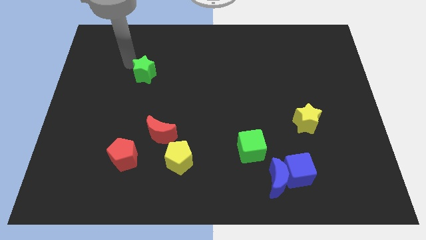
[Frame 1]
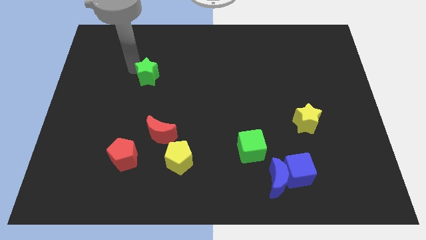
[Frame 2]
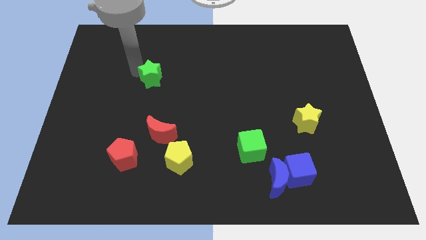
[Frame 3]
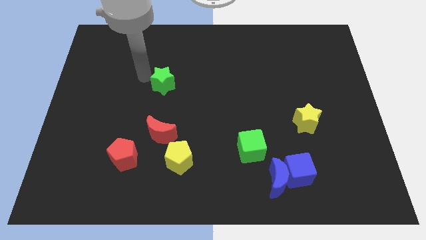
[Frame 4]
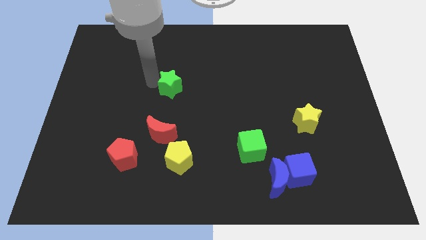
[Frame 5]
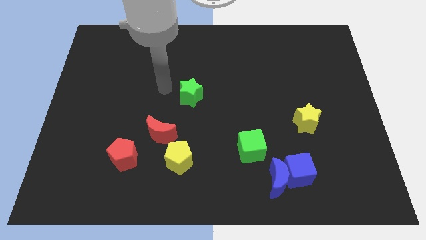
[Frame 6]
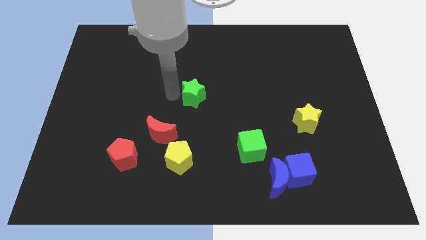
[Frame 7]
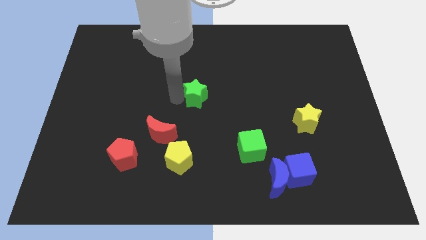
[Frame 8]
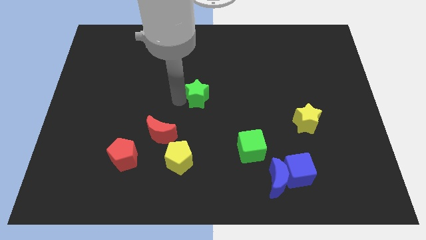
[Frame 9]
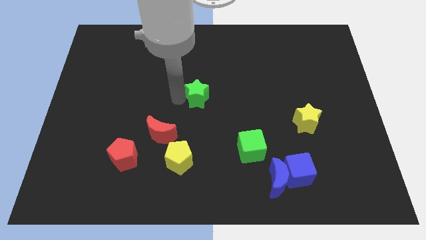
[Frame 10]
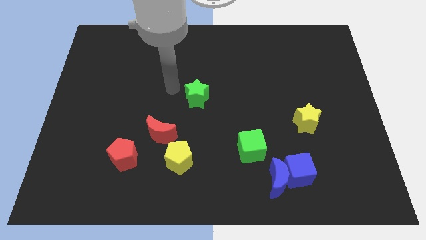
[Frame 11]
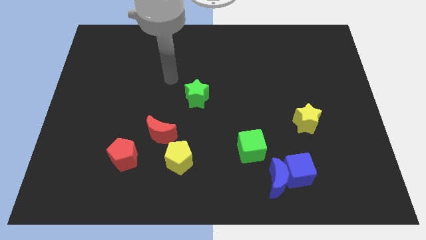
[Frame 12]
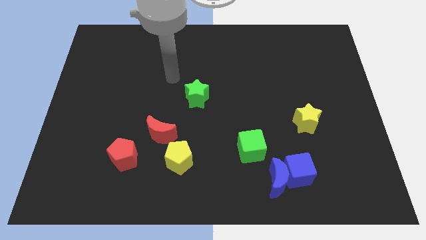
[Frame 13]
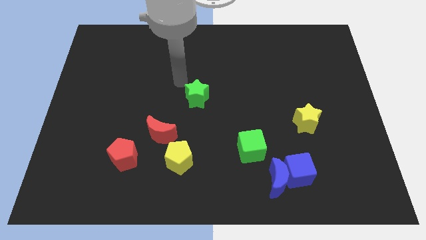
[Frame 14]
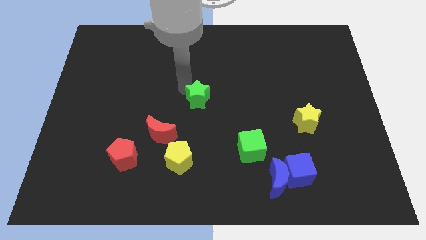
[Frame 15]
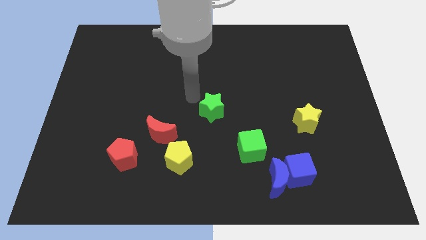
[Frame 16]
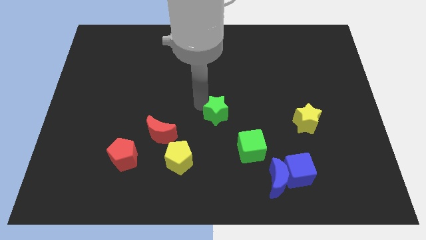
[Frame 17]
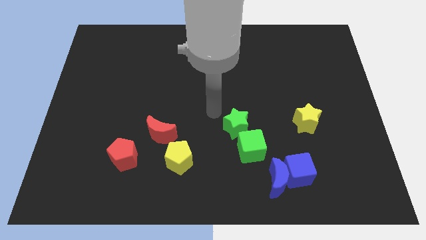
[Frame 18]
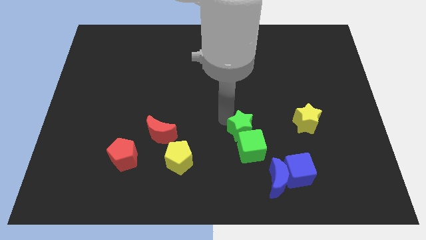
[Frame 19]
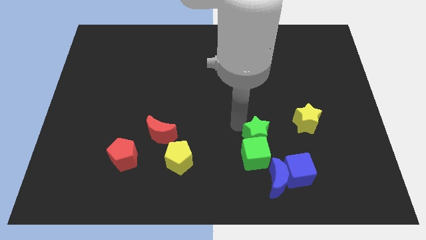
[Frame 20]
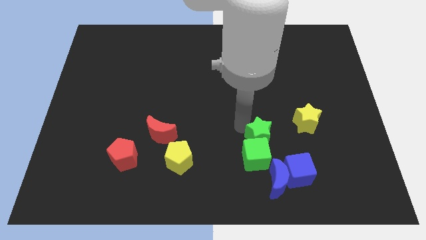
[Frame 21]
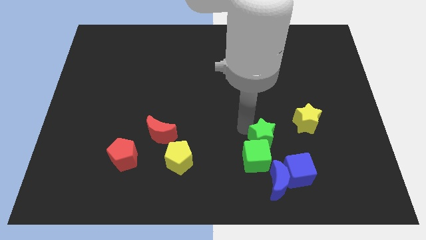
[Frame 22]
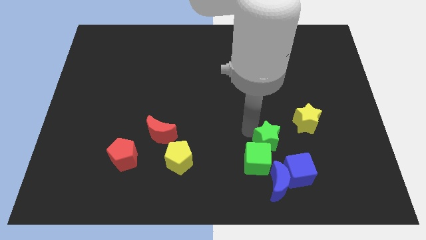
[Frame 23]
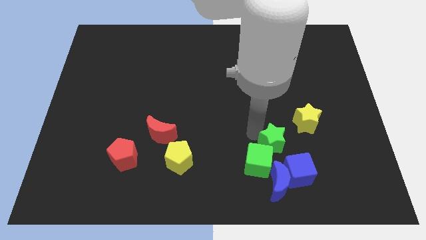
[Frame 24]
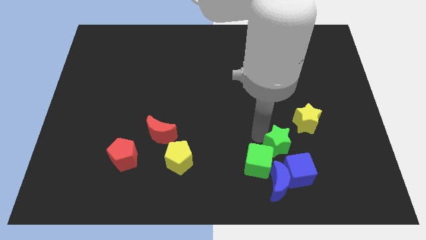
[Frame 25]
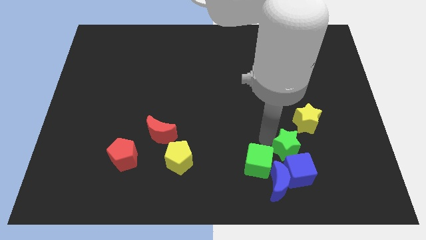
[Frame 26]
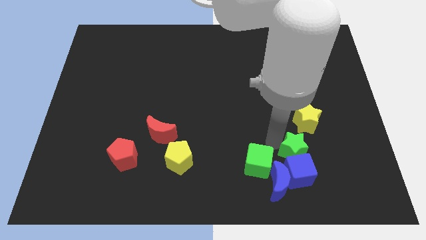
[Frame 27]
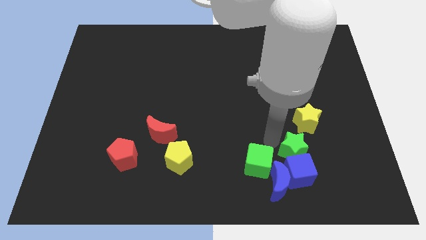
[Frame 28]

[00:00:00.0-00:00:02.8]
slide the green star above the blue cube

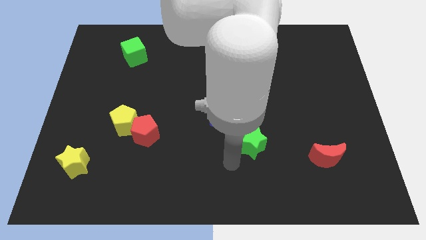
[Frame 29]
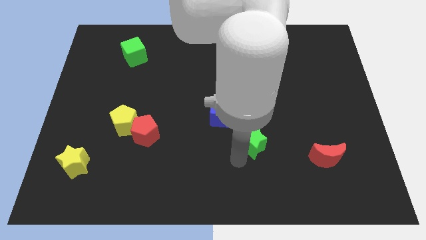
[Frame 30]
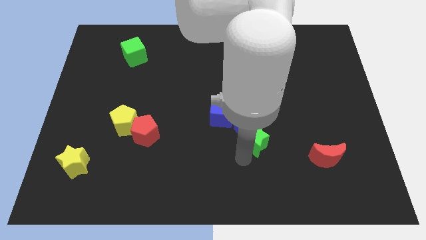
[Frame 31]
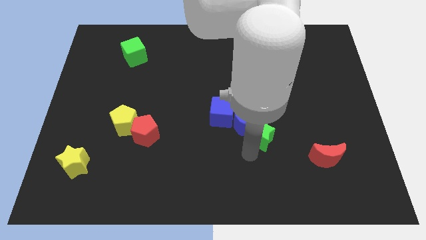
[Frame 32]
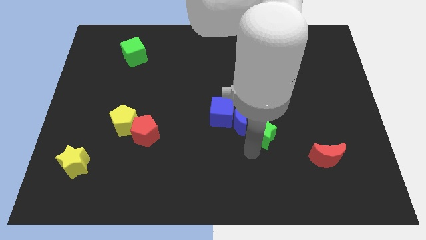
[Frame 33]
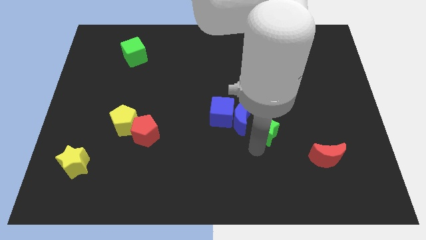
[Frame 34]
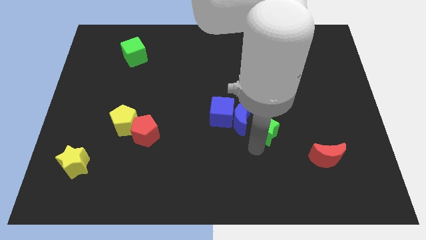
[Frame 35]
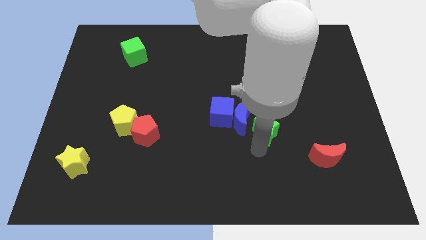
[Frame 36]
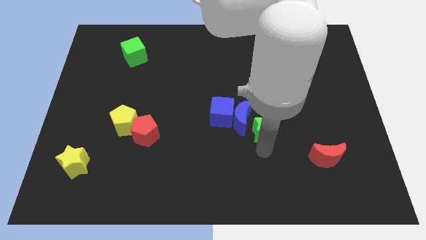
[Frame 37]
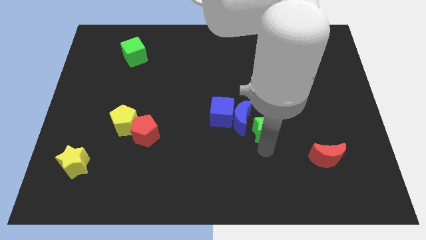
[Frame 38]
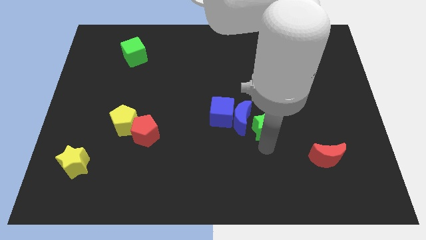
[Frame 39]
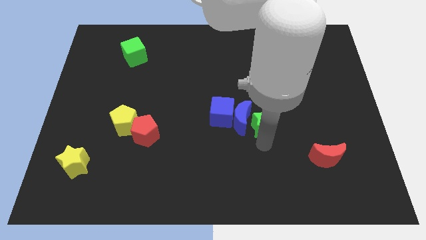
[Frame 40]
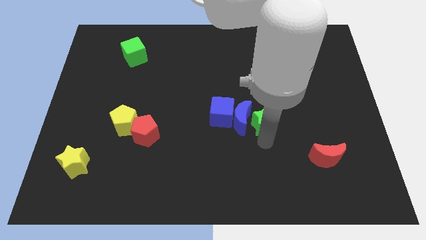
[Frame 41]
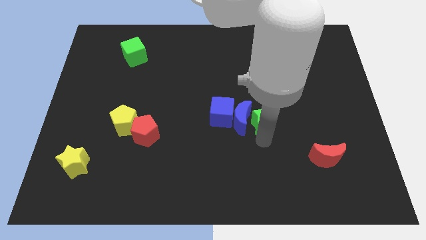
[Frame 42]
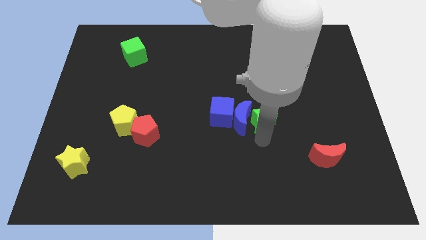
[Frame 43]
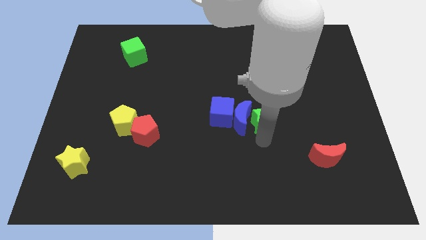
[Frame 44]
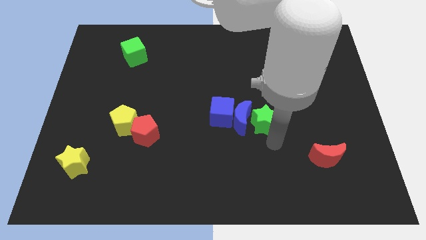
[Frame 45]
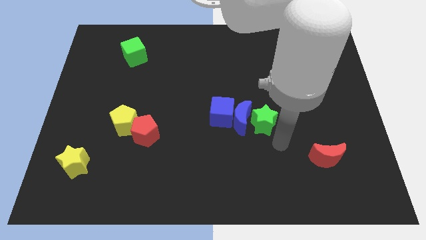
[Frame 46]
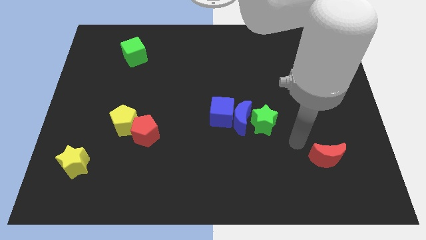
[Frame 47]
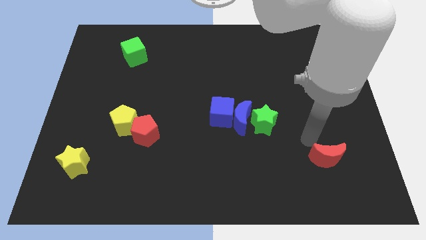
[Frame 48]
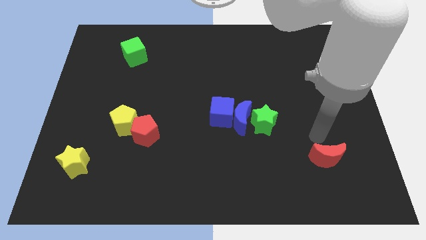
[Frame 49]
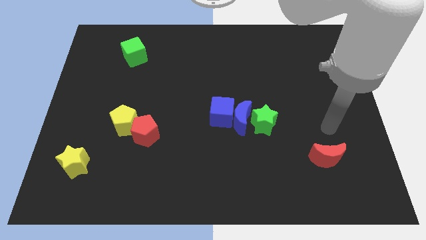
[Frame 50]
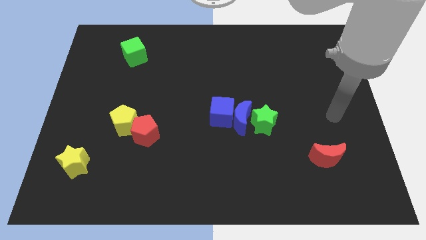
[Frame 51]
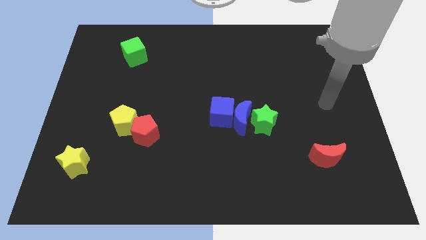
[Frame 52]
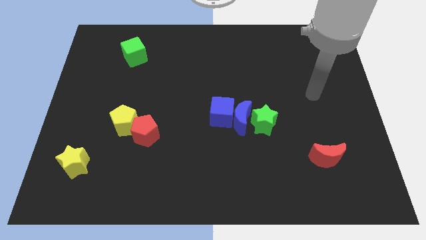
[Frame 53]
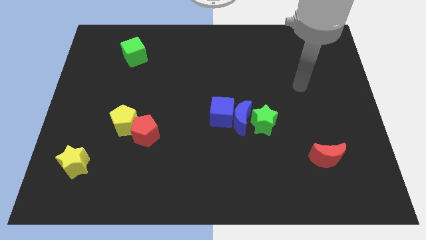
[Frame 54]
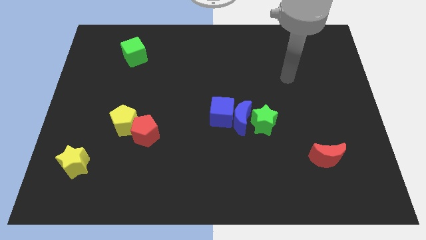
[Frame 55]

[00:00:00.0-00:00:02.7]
move the green star right to the blue crescent

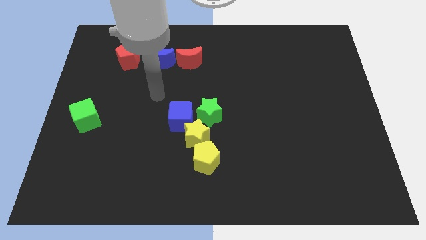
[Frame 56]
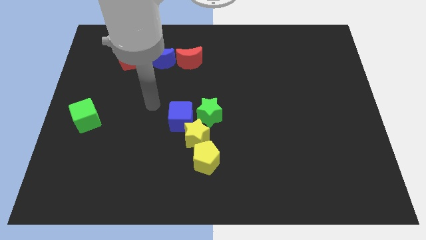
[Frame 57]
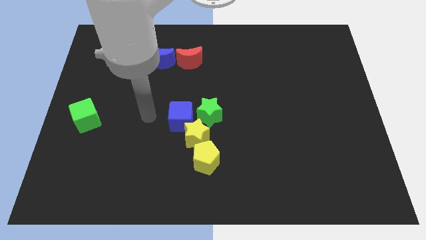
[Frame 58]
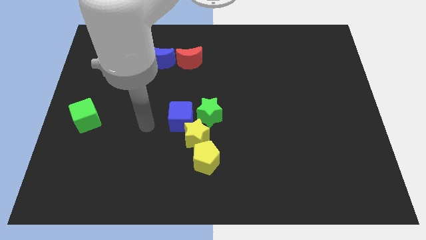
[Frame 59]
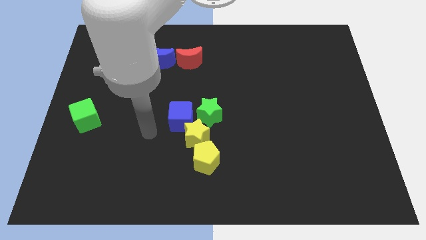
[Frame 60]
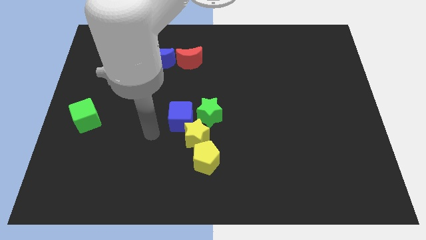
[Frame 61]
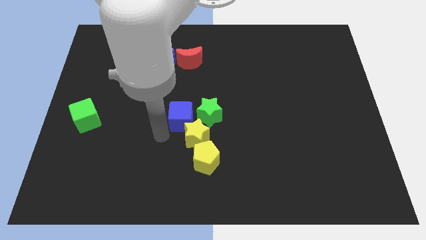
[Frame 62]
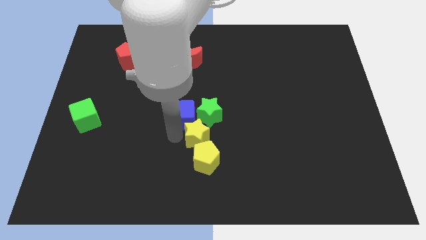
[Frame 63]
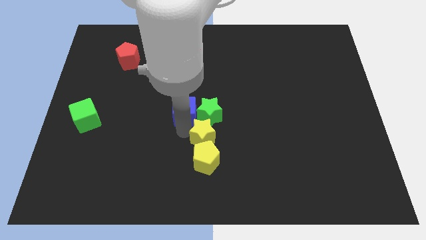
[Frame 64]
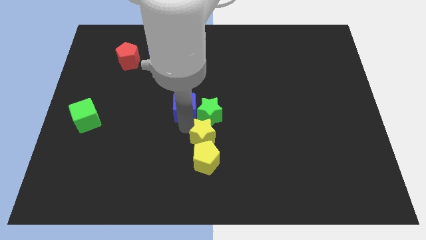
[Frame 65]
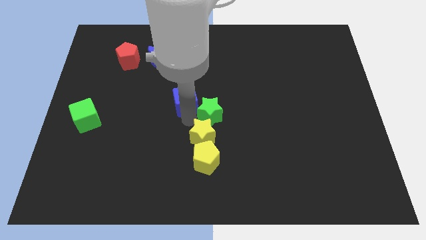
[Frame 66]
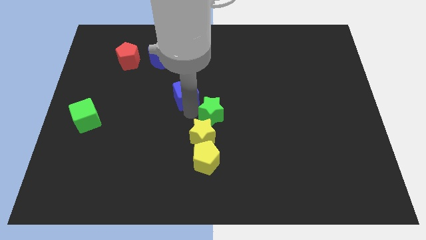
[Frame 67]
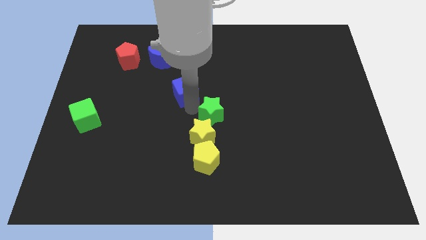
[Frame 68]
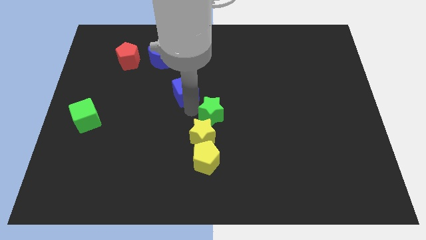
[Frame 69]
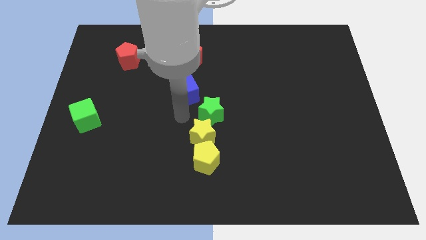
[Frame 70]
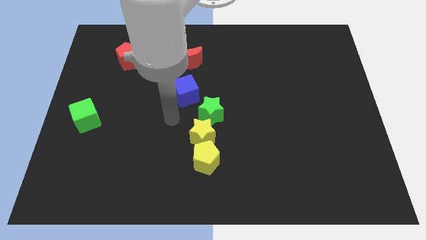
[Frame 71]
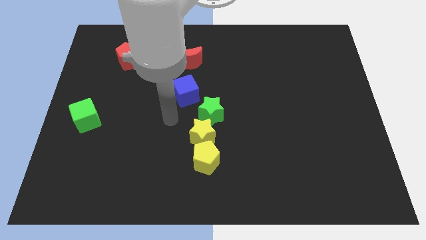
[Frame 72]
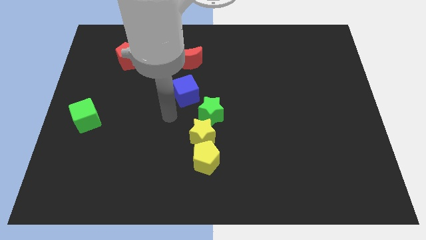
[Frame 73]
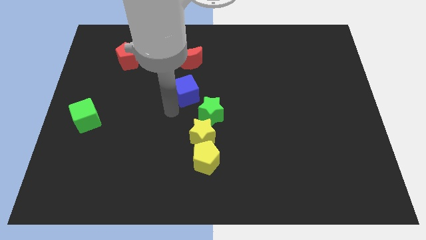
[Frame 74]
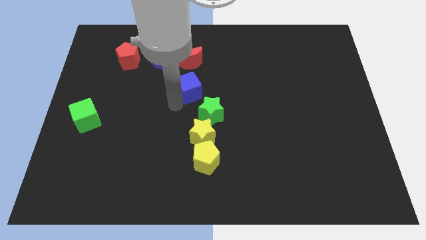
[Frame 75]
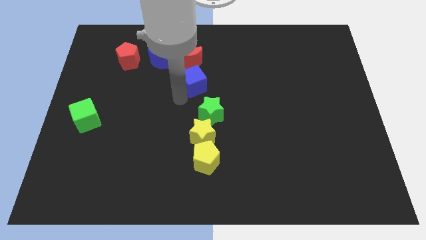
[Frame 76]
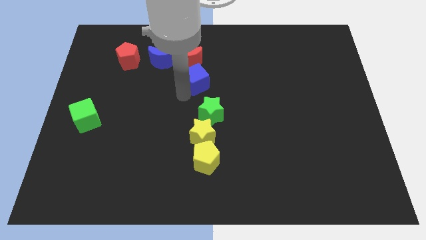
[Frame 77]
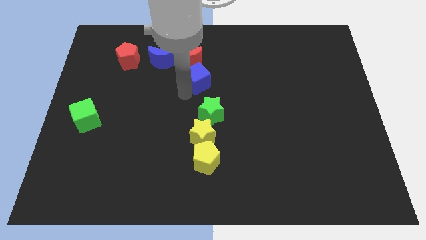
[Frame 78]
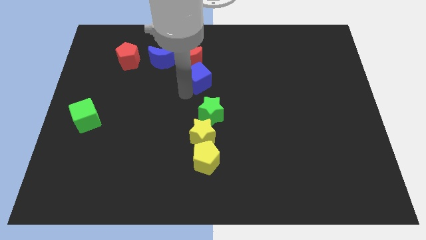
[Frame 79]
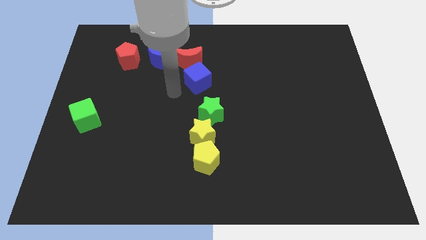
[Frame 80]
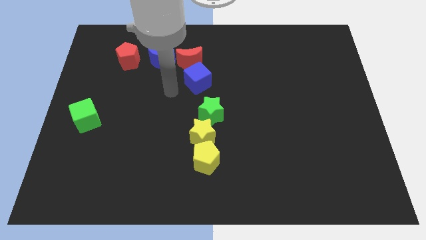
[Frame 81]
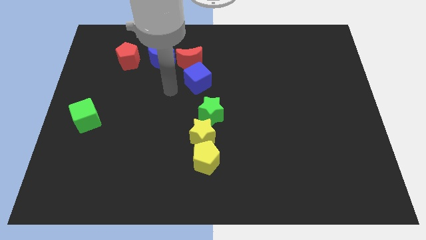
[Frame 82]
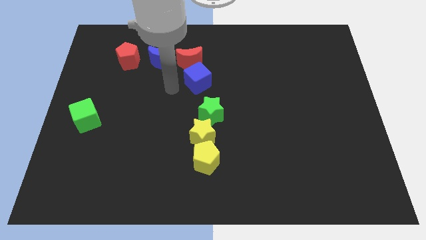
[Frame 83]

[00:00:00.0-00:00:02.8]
move the blue cube close to the red crescent

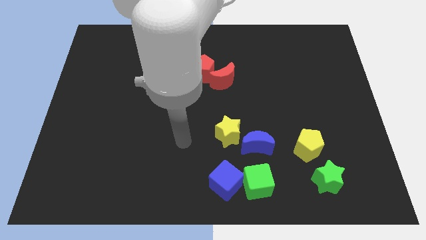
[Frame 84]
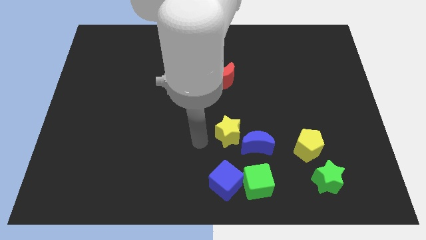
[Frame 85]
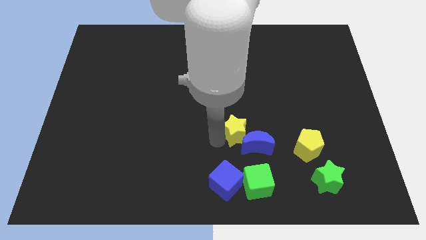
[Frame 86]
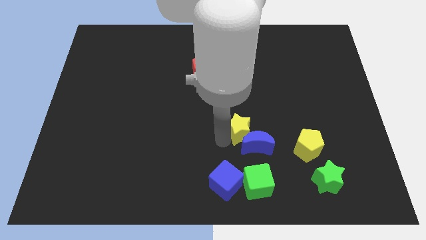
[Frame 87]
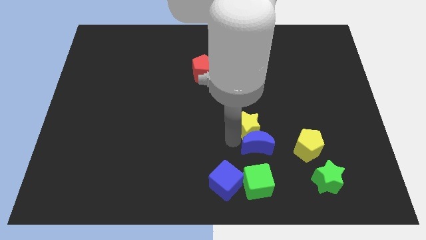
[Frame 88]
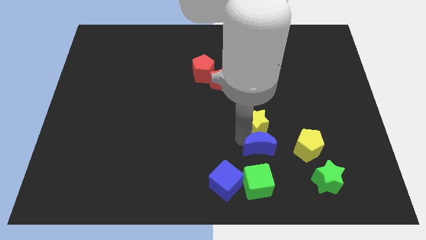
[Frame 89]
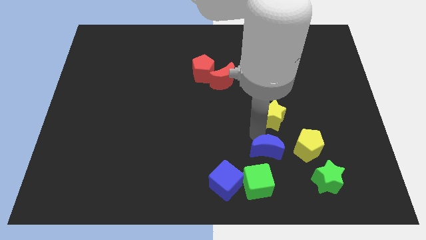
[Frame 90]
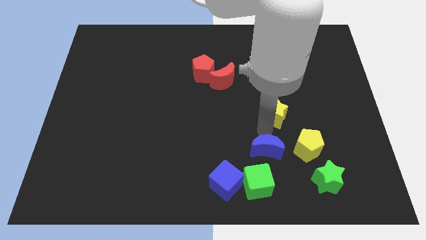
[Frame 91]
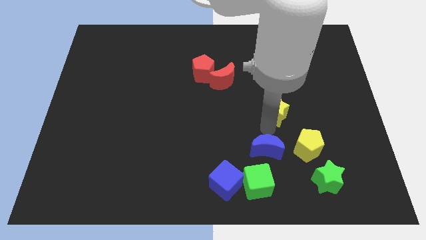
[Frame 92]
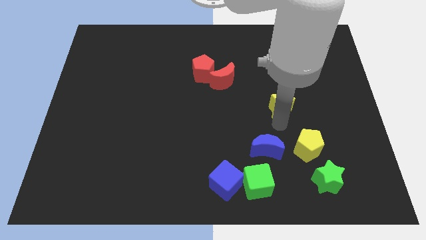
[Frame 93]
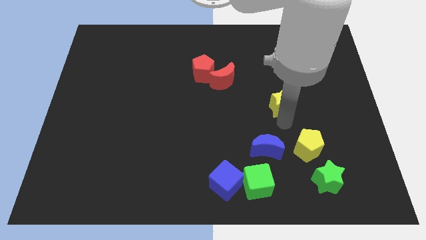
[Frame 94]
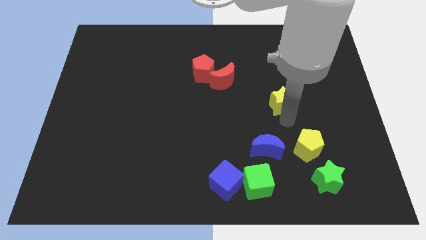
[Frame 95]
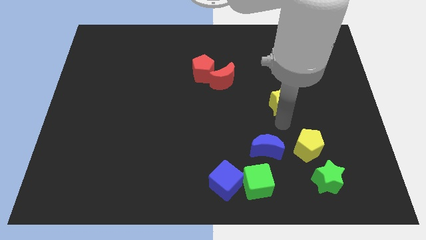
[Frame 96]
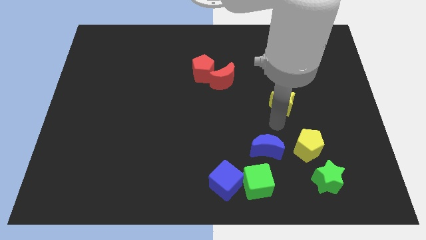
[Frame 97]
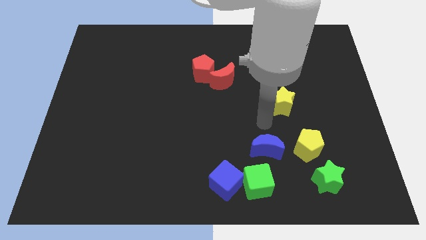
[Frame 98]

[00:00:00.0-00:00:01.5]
move the yellow star slightly top right to the blue crescent
